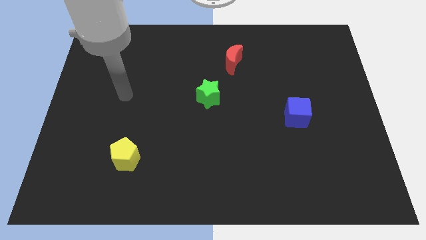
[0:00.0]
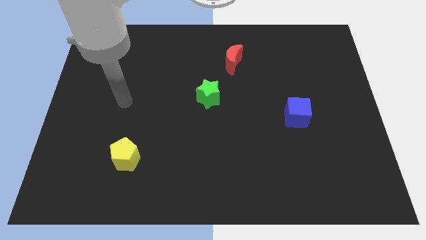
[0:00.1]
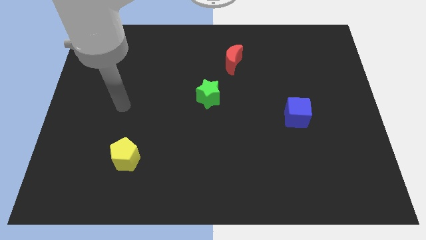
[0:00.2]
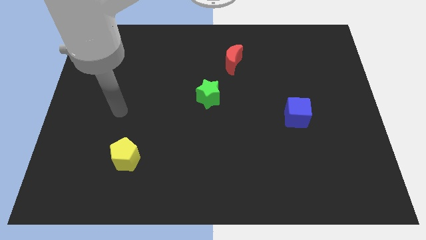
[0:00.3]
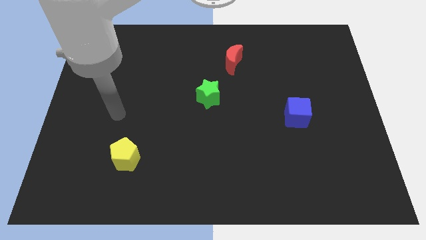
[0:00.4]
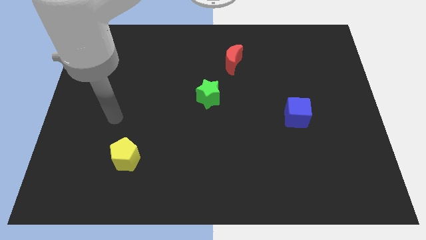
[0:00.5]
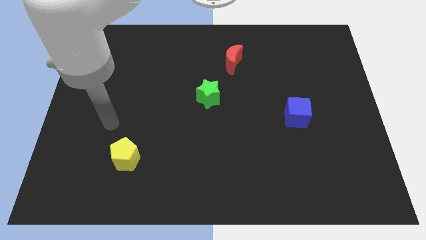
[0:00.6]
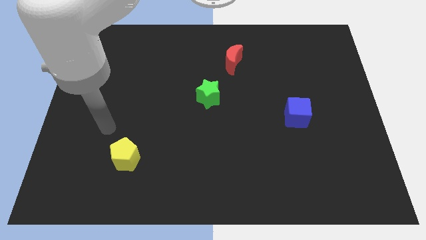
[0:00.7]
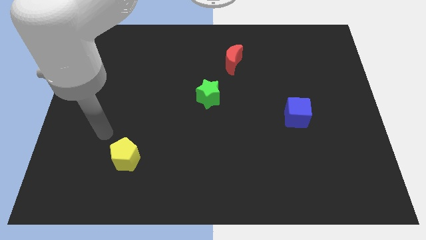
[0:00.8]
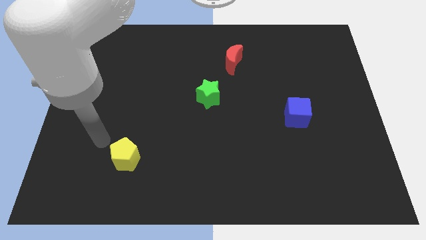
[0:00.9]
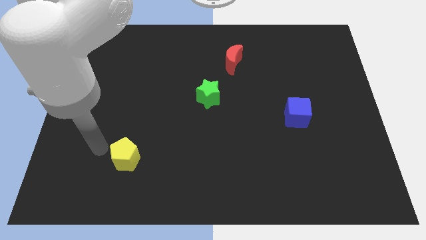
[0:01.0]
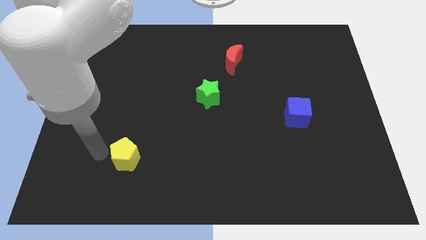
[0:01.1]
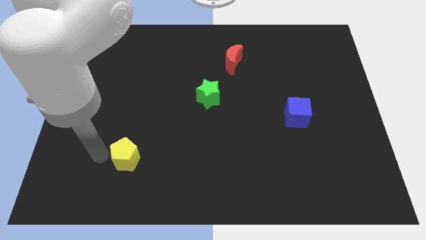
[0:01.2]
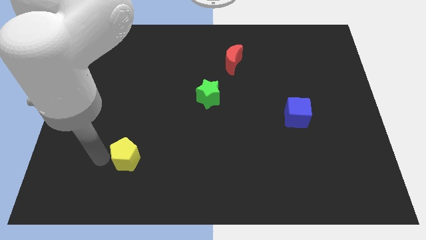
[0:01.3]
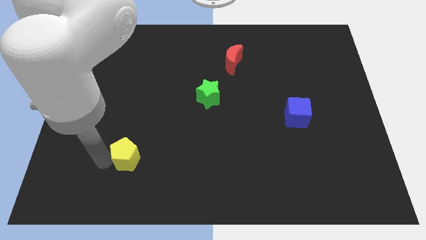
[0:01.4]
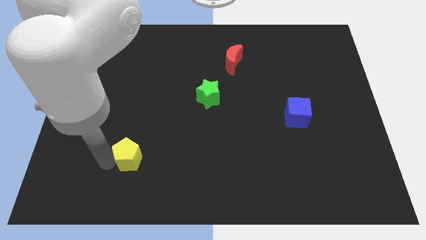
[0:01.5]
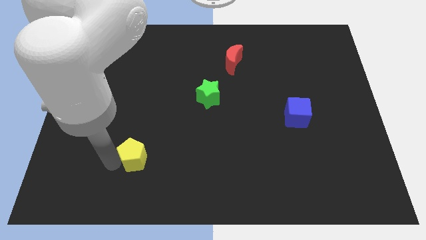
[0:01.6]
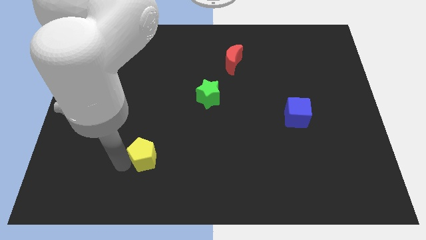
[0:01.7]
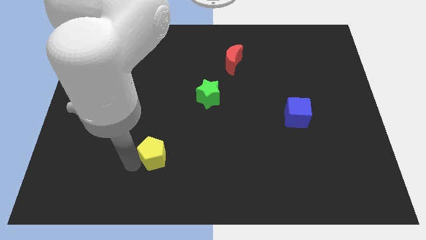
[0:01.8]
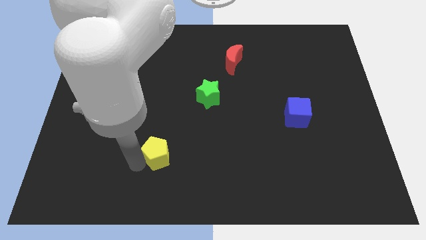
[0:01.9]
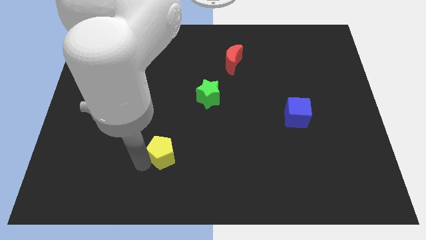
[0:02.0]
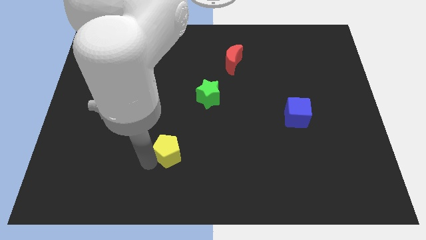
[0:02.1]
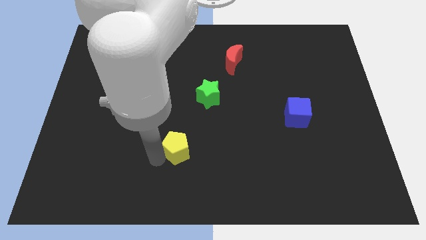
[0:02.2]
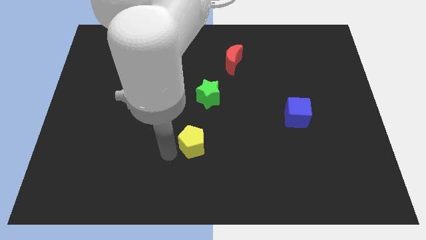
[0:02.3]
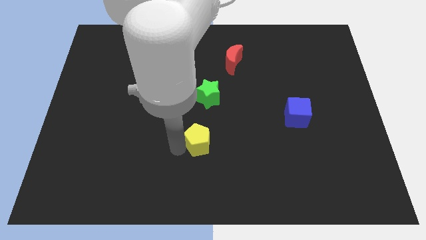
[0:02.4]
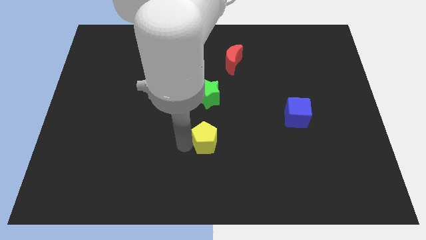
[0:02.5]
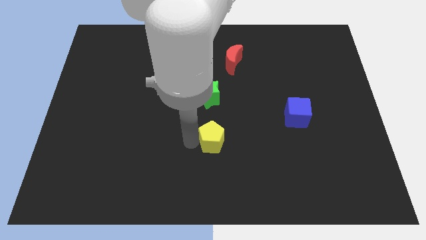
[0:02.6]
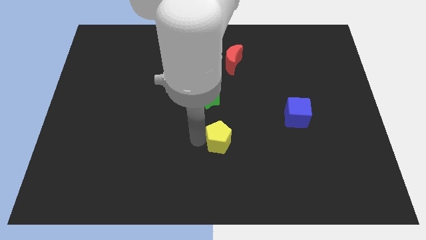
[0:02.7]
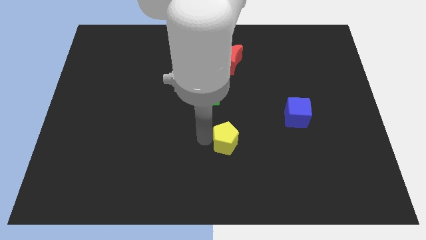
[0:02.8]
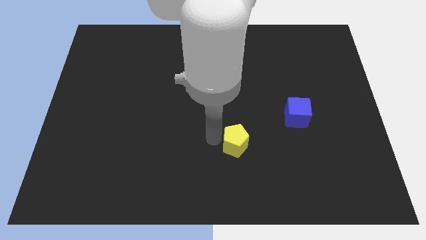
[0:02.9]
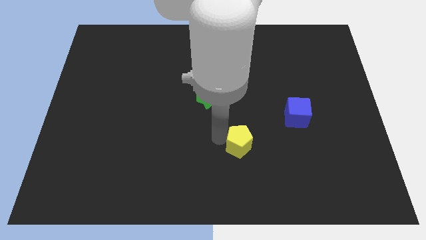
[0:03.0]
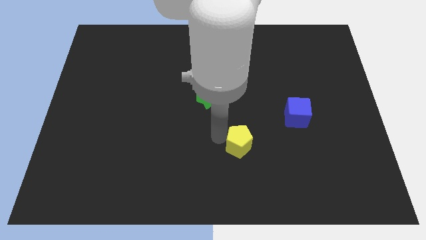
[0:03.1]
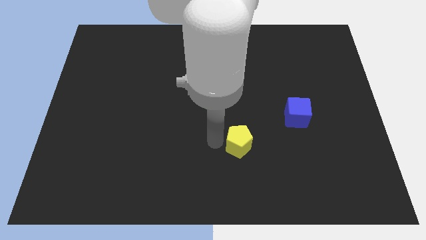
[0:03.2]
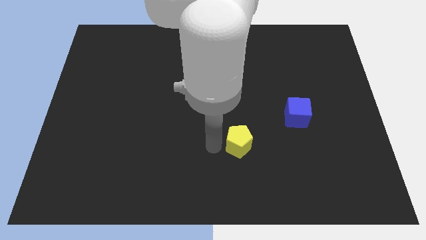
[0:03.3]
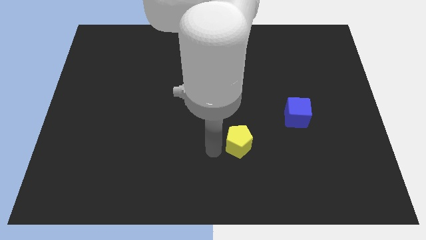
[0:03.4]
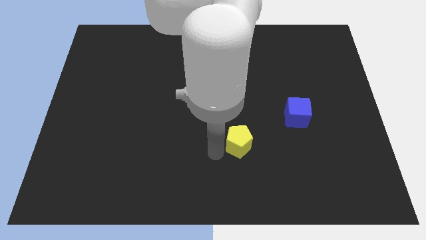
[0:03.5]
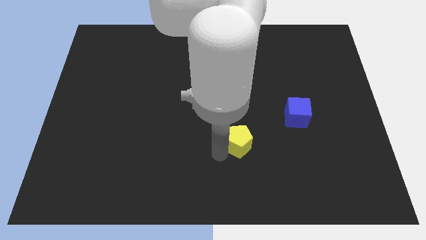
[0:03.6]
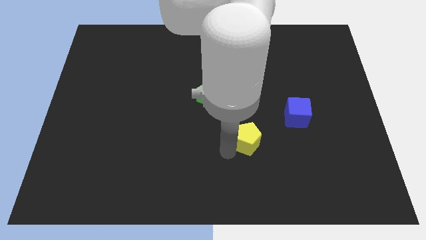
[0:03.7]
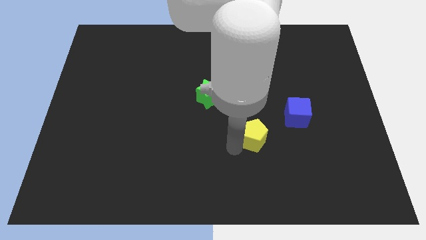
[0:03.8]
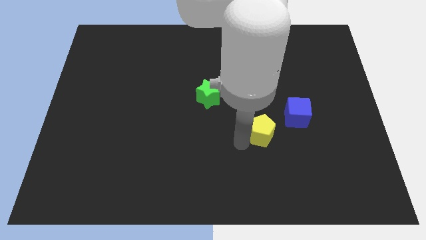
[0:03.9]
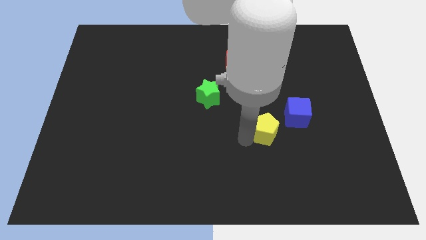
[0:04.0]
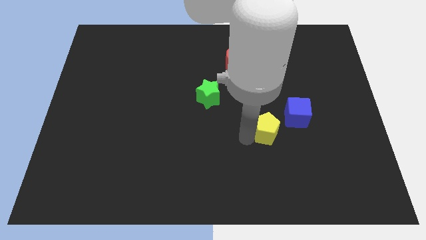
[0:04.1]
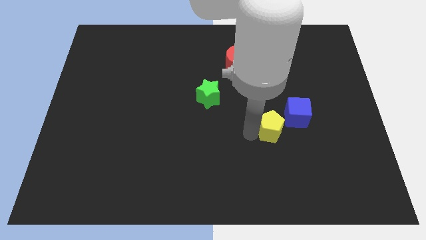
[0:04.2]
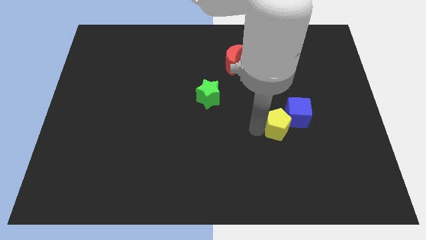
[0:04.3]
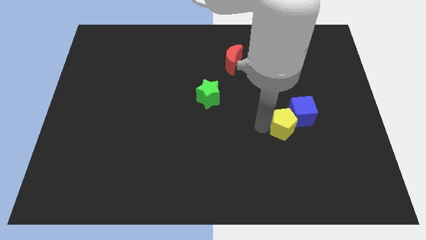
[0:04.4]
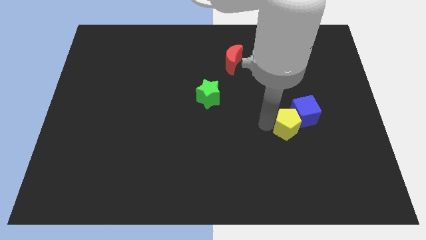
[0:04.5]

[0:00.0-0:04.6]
slide the yellow block towards the blue cube

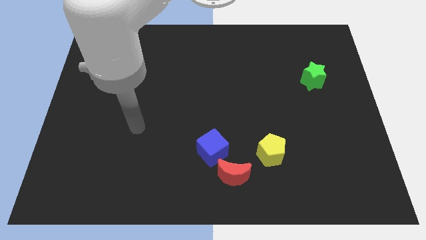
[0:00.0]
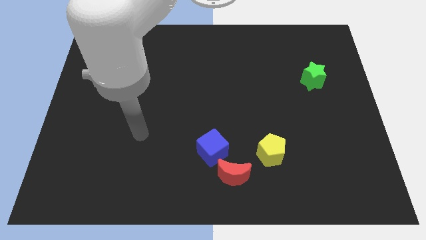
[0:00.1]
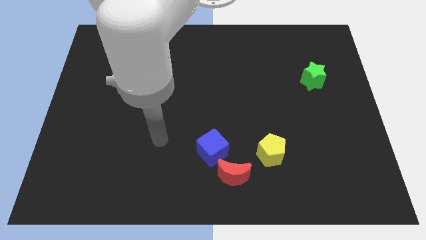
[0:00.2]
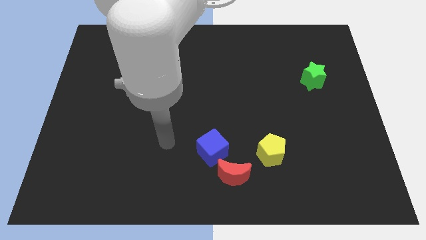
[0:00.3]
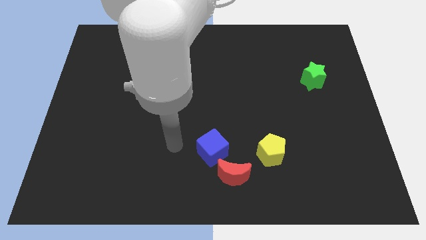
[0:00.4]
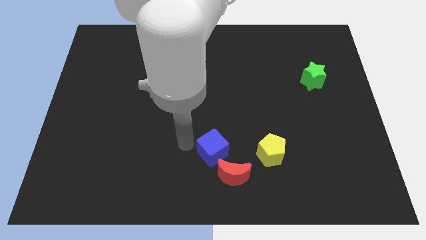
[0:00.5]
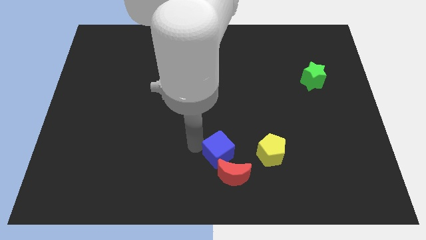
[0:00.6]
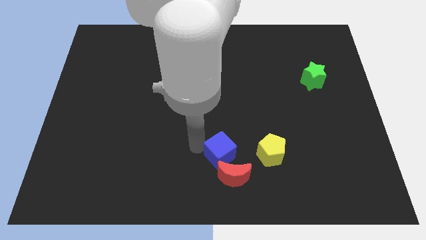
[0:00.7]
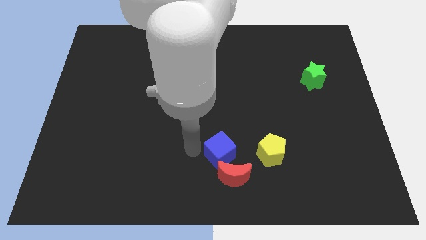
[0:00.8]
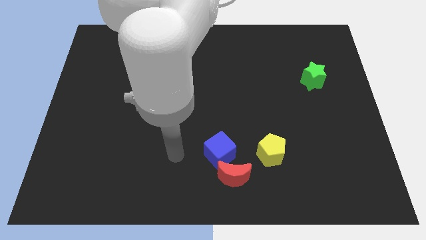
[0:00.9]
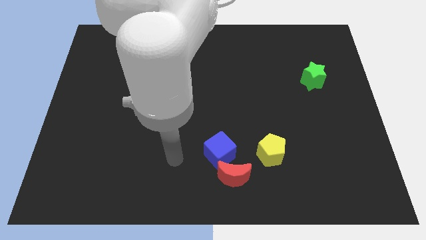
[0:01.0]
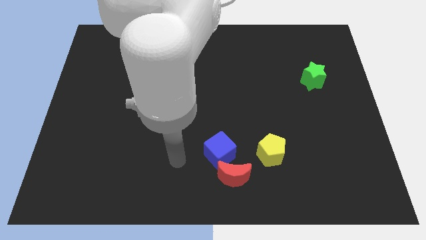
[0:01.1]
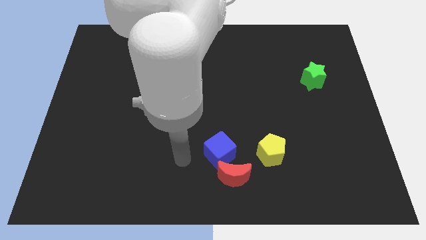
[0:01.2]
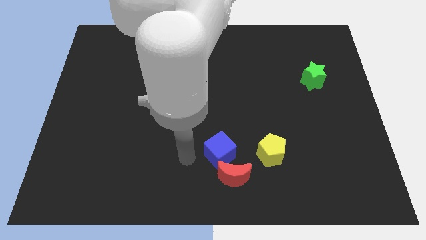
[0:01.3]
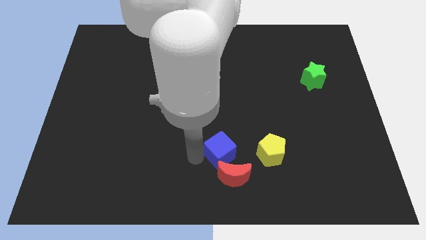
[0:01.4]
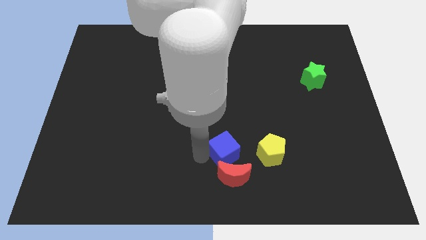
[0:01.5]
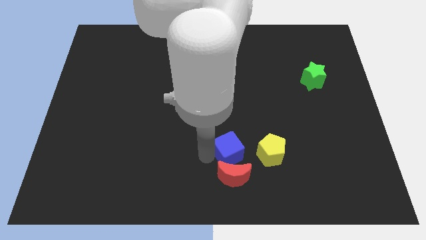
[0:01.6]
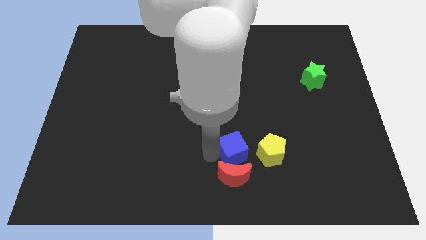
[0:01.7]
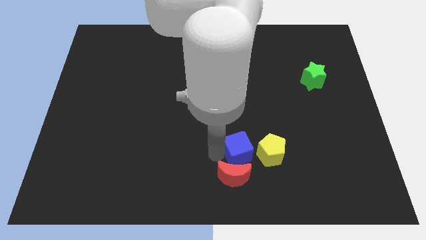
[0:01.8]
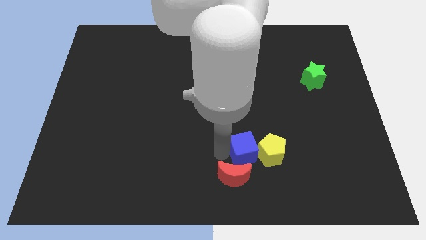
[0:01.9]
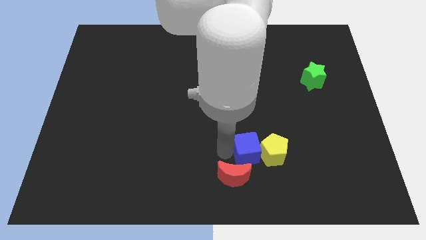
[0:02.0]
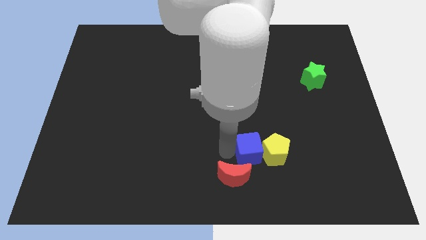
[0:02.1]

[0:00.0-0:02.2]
slide the blue block close to the yellow block

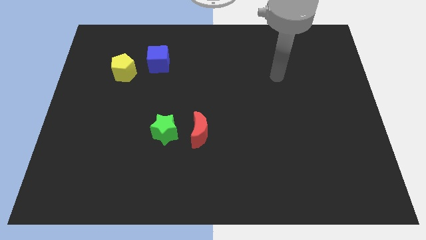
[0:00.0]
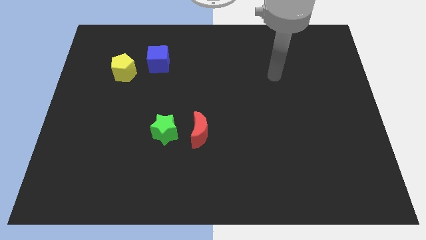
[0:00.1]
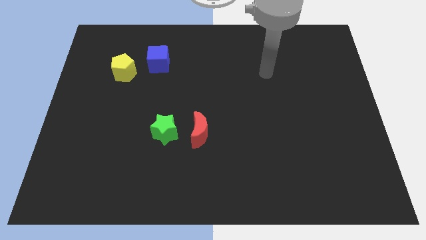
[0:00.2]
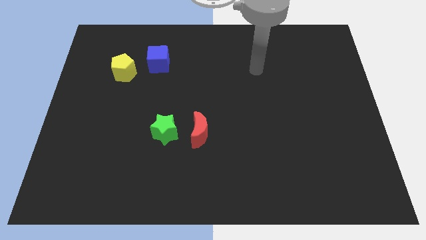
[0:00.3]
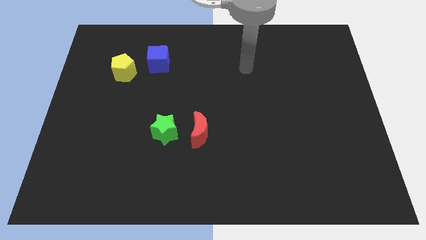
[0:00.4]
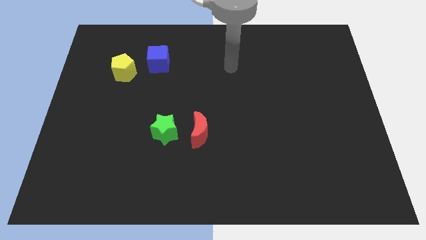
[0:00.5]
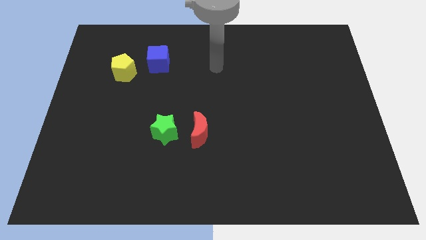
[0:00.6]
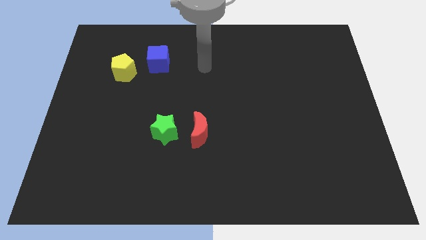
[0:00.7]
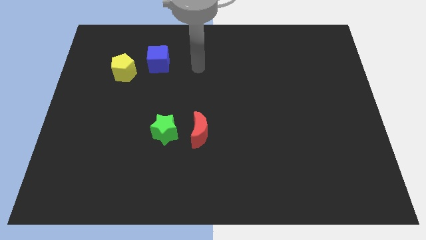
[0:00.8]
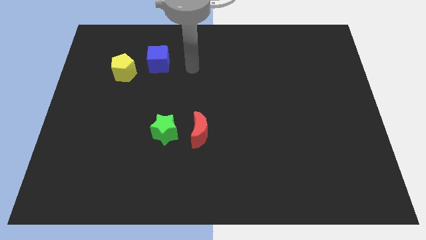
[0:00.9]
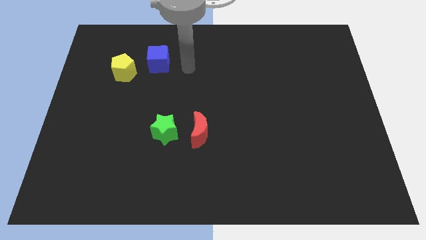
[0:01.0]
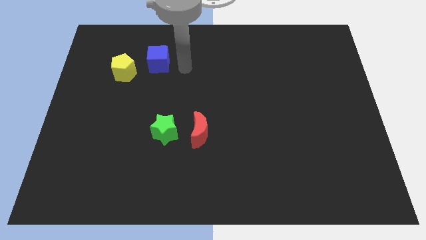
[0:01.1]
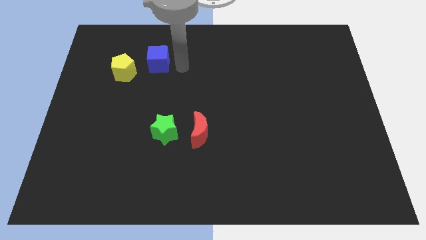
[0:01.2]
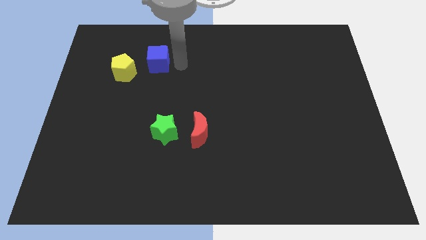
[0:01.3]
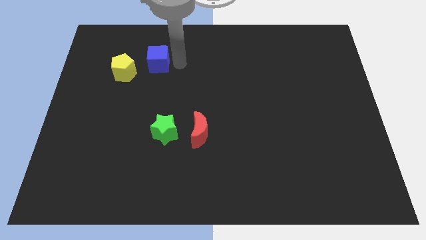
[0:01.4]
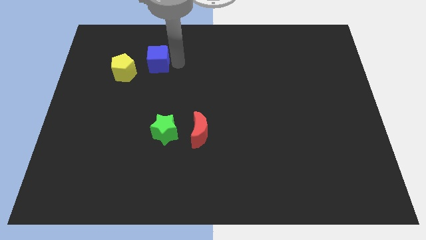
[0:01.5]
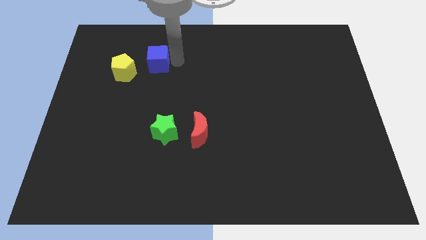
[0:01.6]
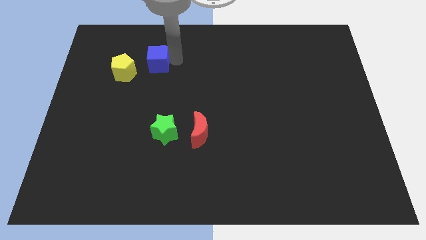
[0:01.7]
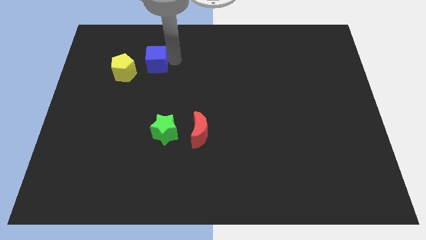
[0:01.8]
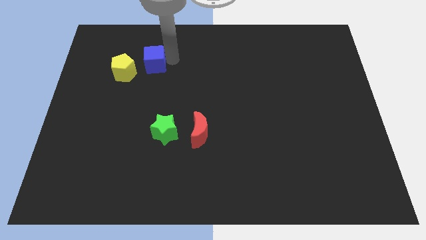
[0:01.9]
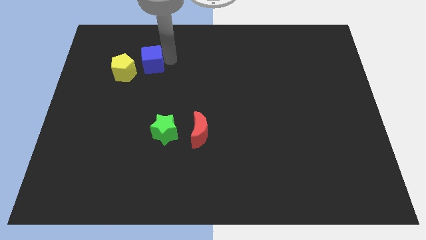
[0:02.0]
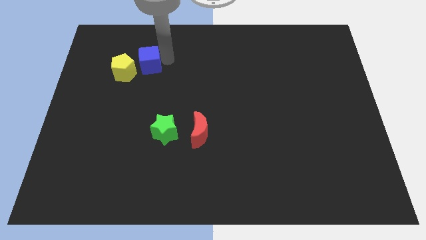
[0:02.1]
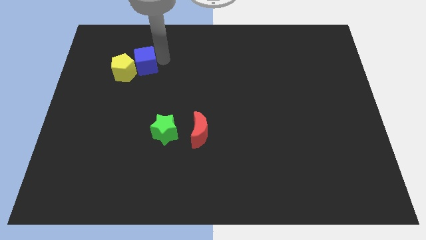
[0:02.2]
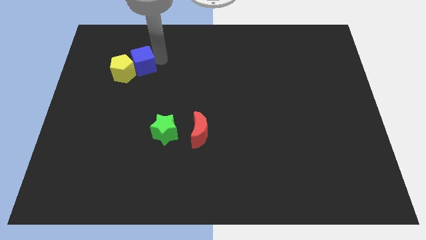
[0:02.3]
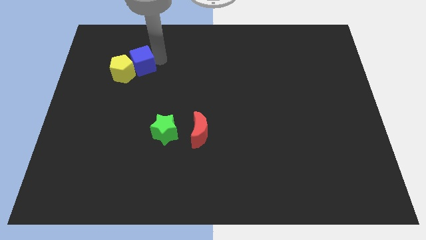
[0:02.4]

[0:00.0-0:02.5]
put the cube close to the yellow block
